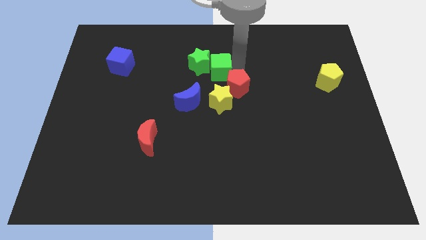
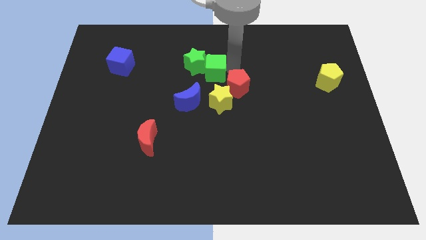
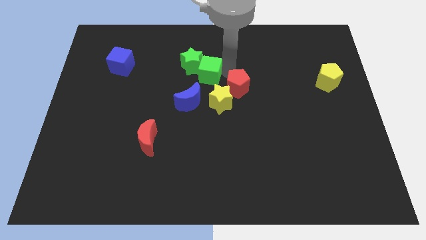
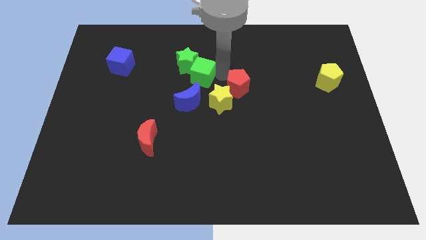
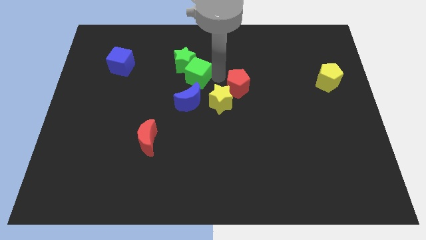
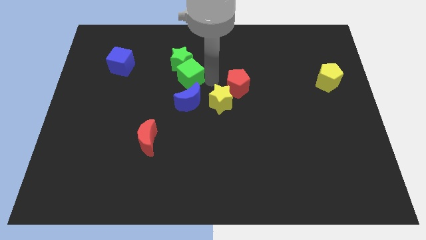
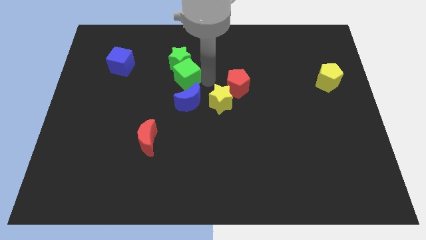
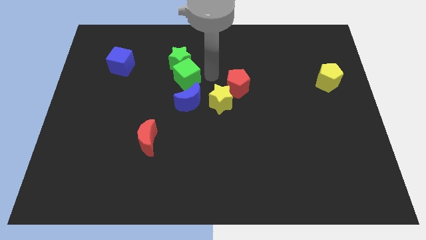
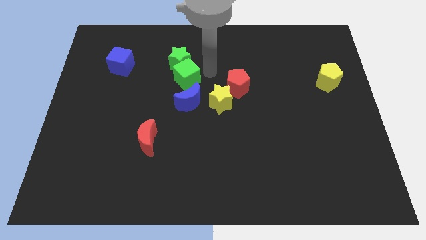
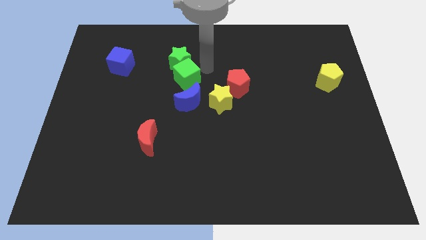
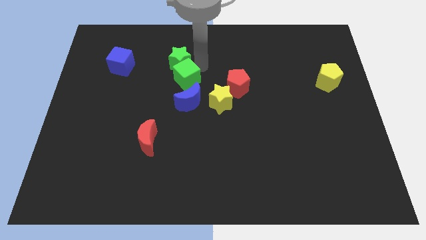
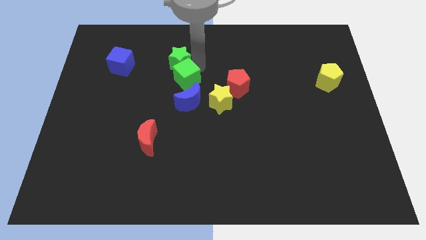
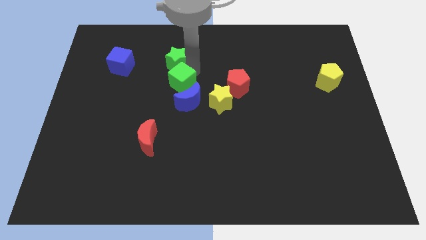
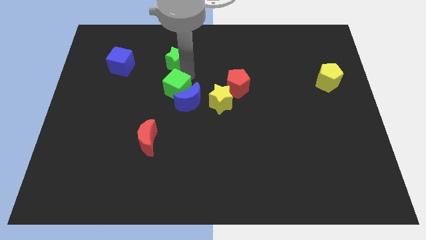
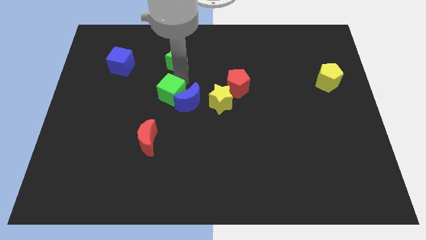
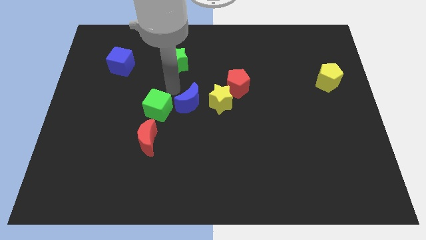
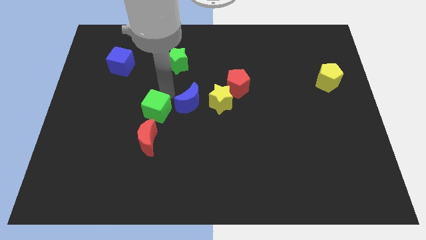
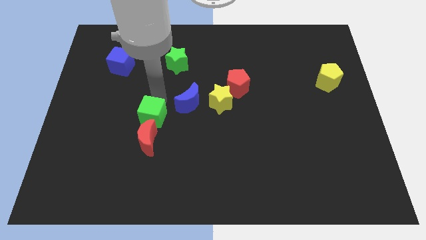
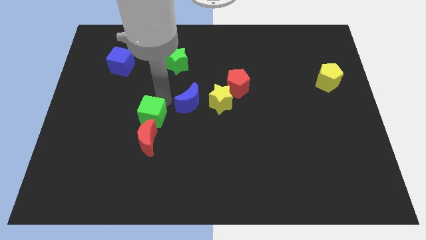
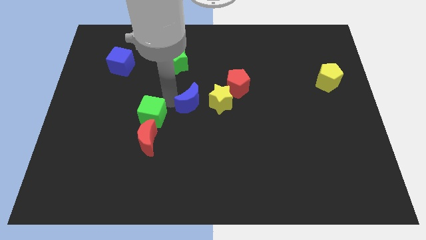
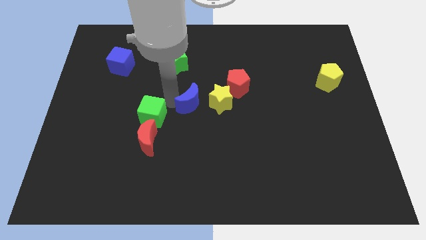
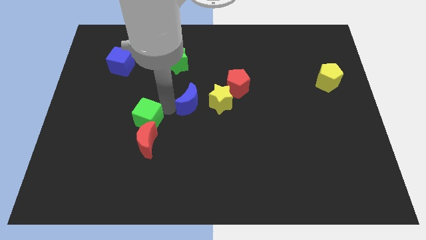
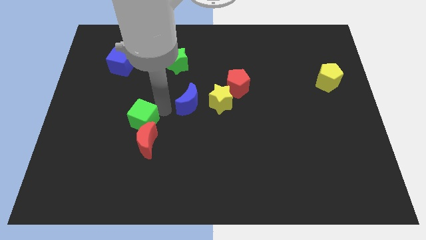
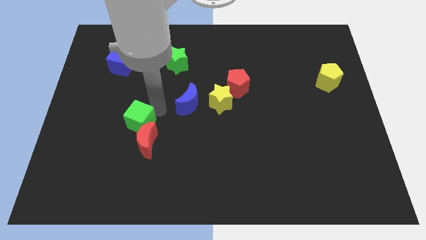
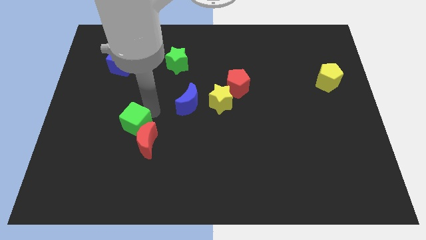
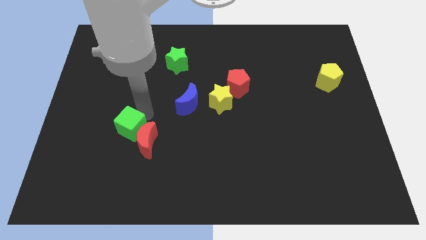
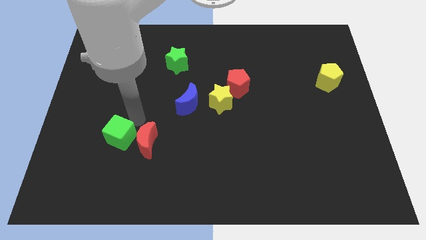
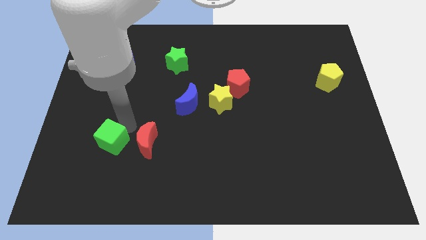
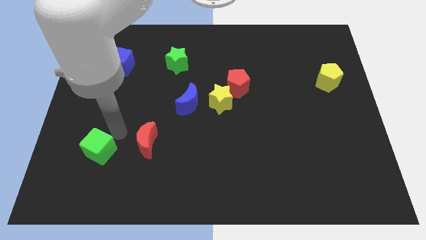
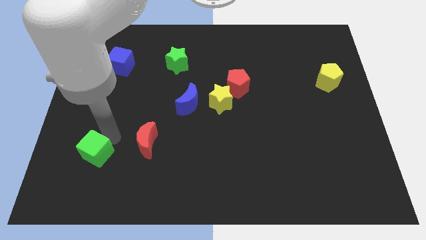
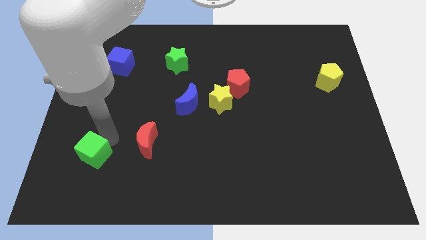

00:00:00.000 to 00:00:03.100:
separate the green cube from the green square

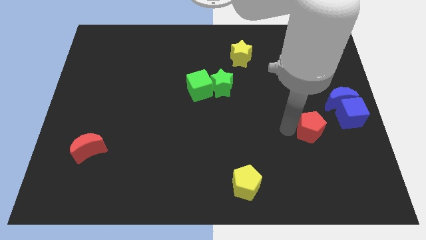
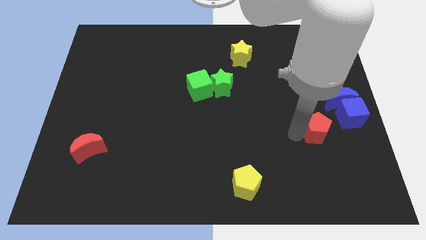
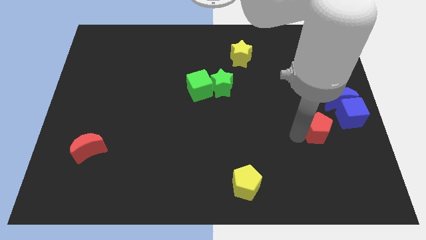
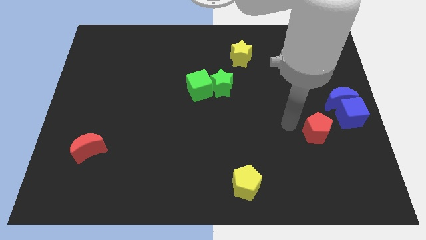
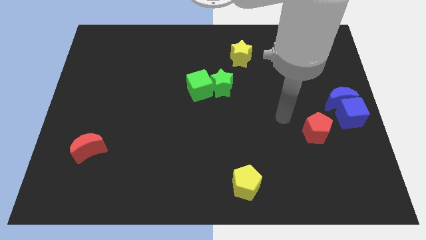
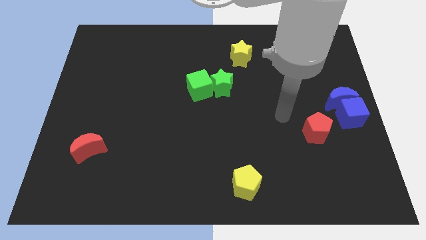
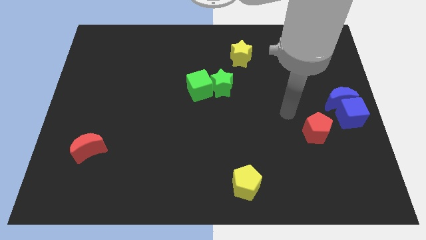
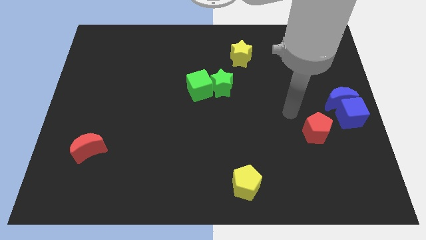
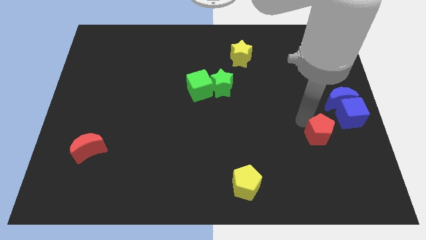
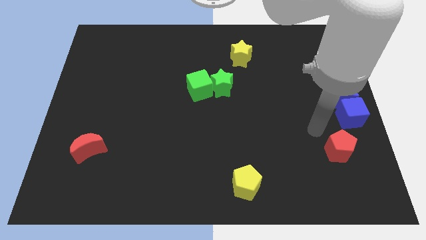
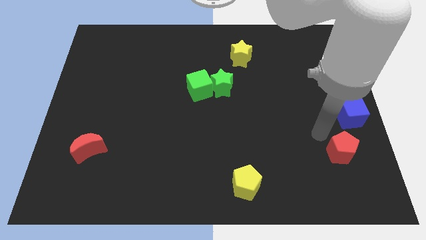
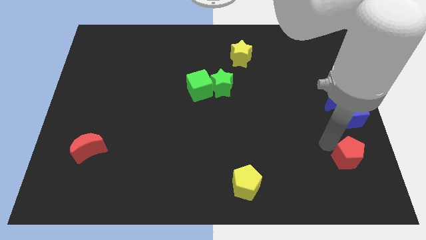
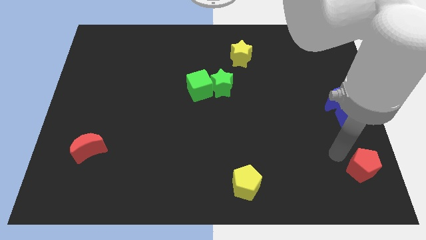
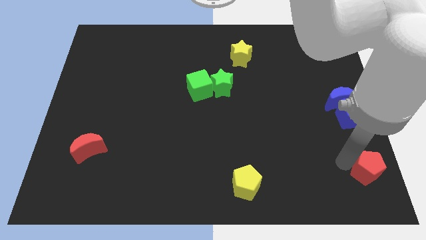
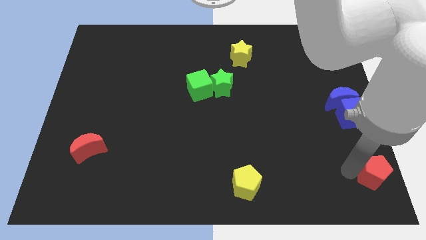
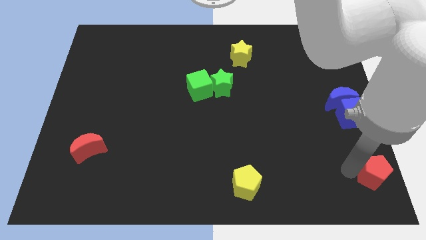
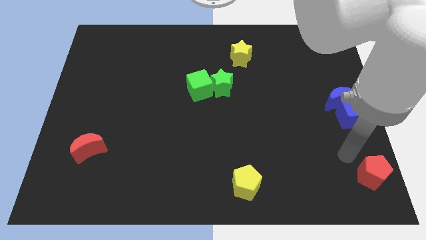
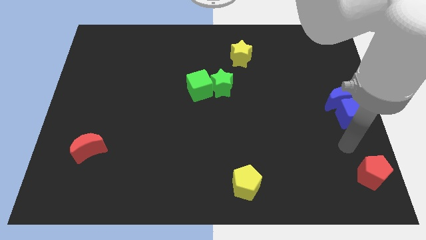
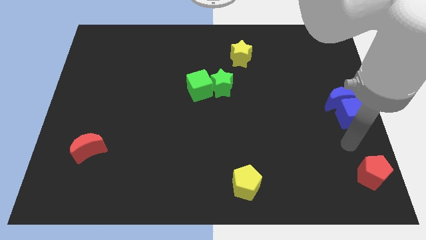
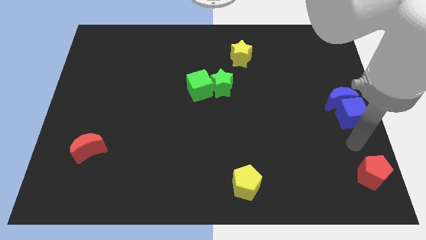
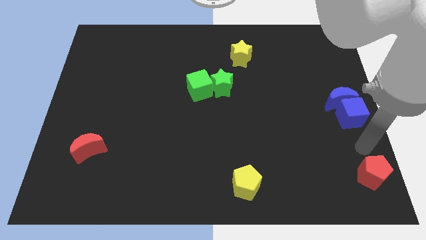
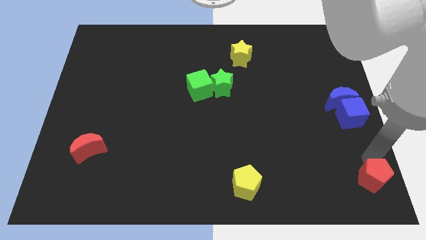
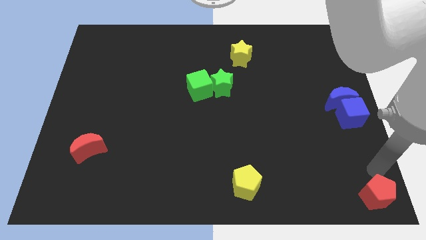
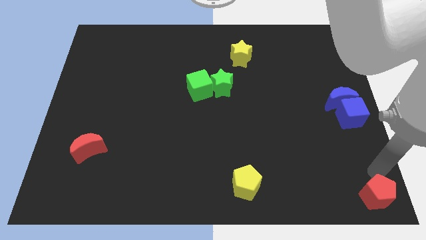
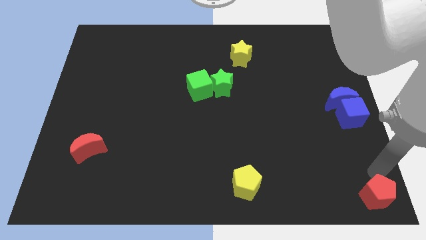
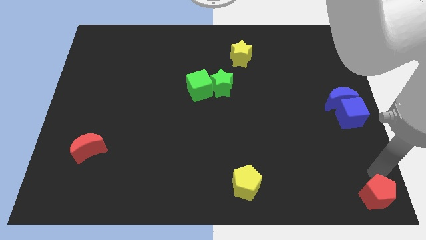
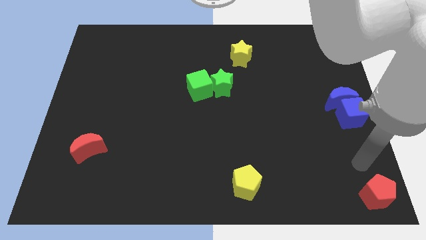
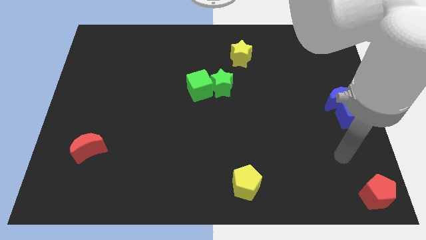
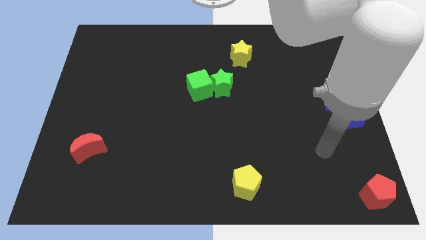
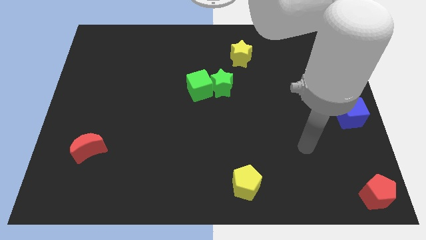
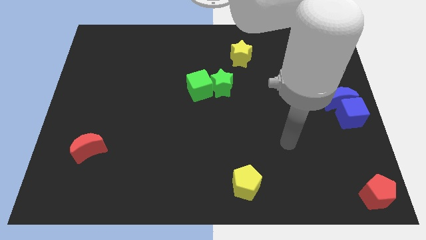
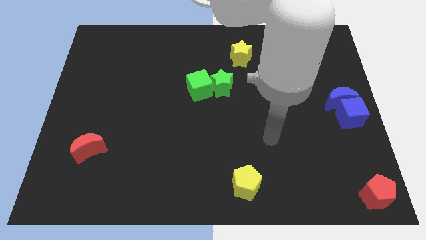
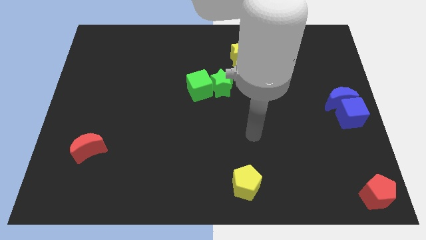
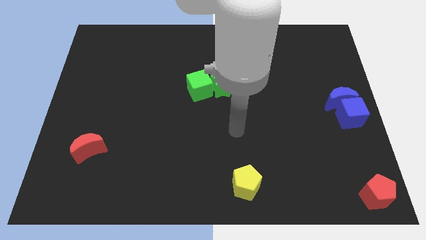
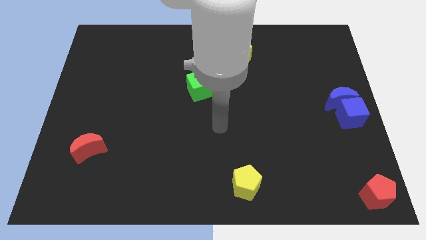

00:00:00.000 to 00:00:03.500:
place the red pentagon to the bottom right corner of the board

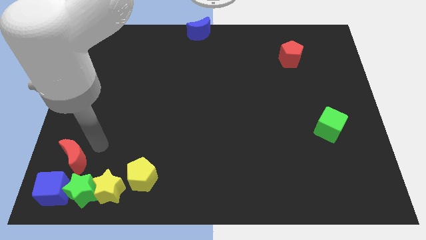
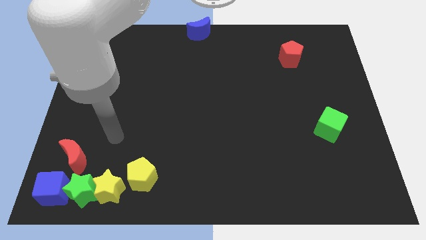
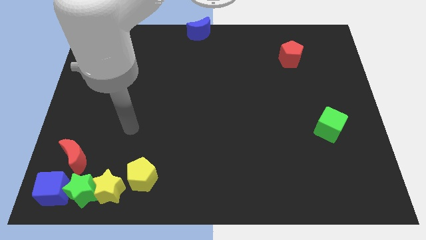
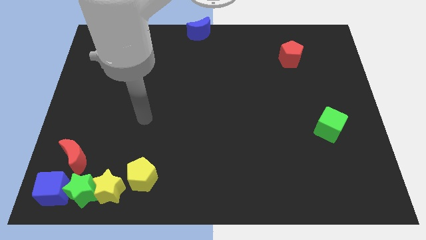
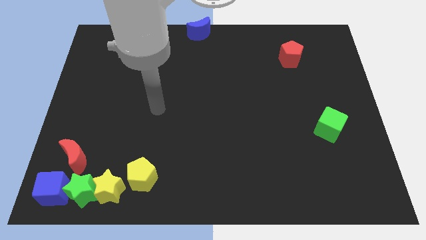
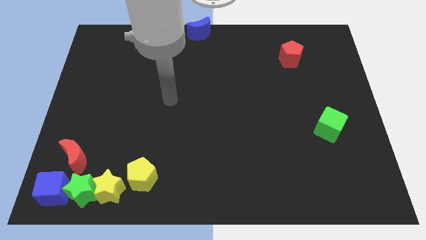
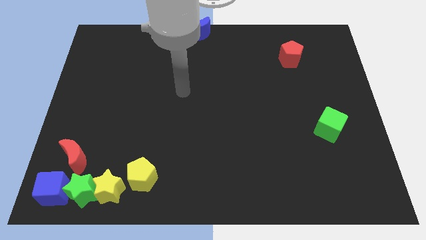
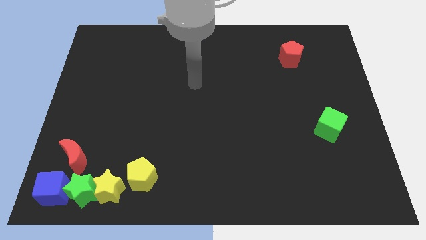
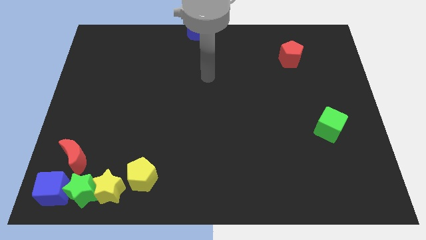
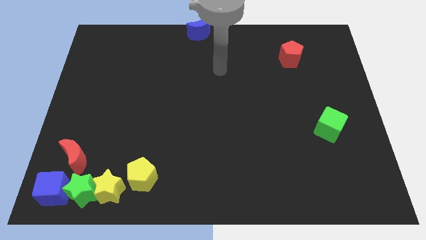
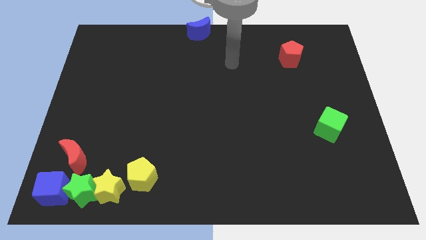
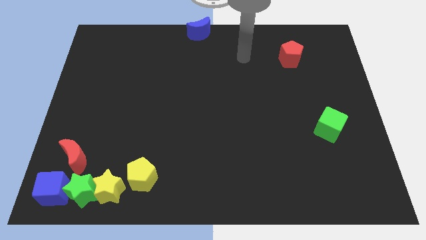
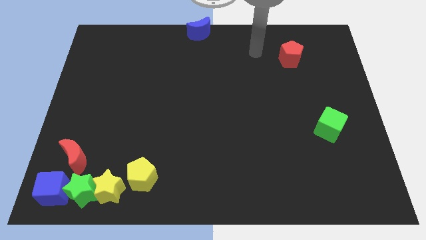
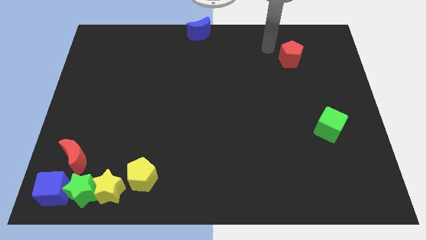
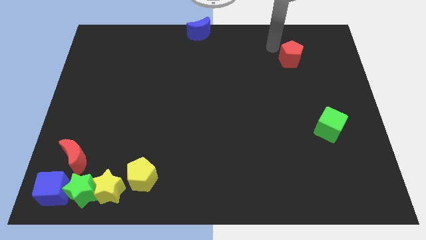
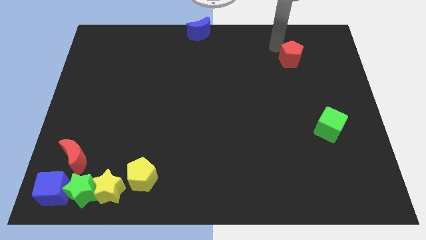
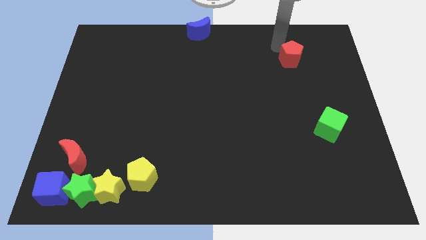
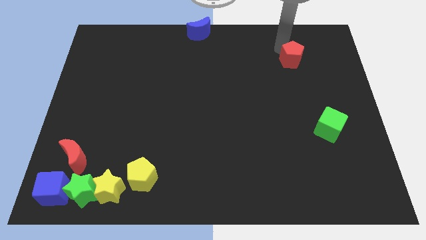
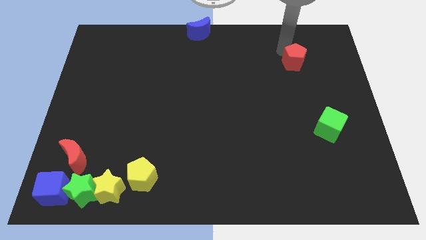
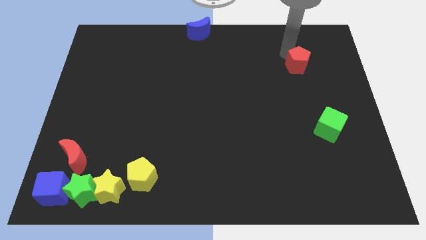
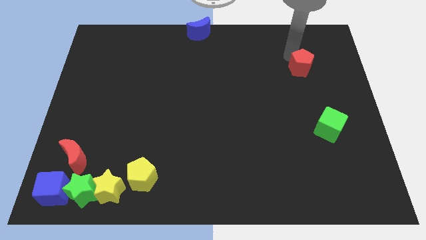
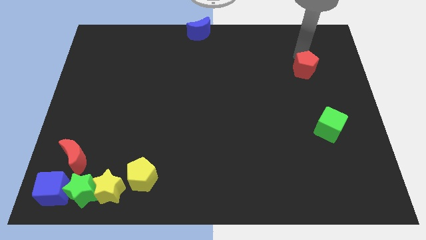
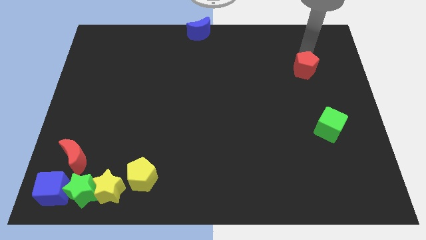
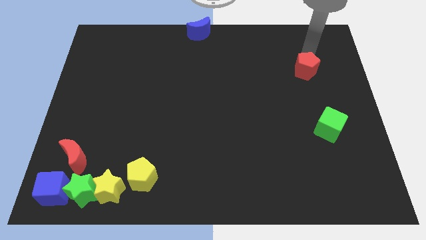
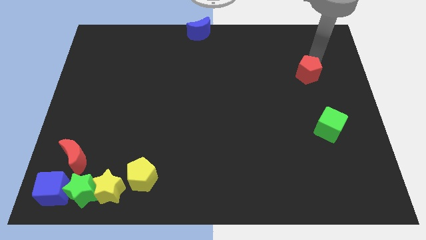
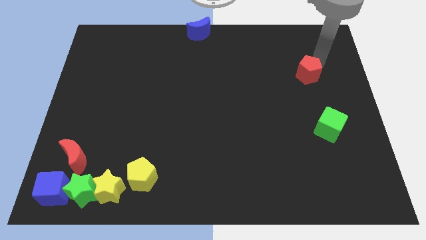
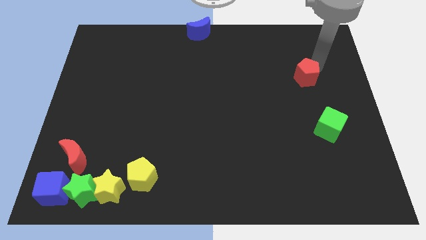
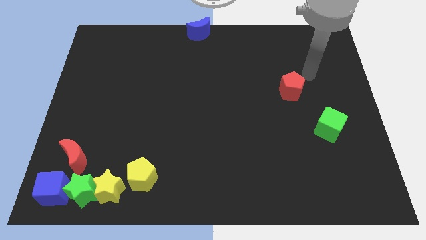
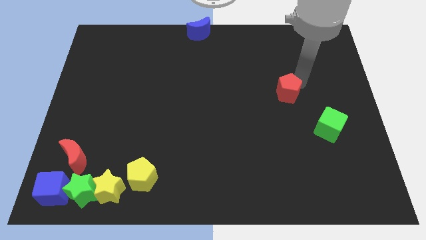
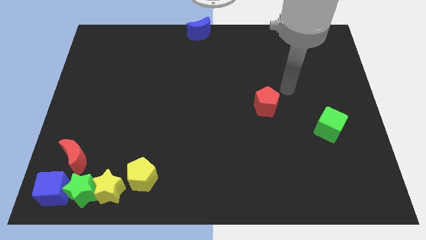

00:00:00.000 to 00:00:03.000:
push the red pentagon to the top left of the green cube
